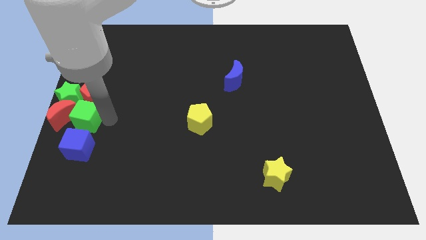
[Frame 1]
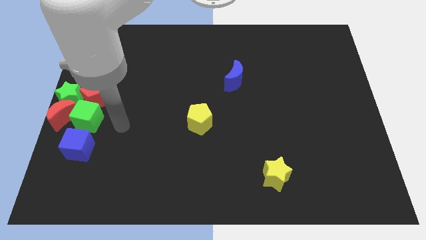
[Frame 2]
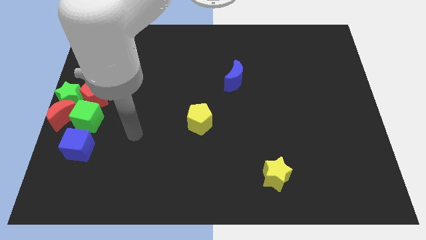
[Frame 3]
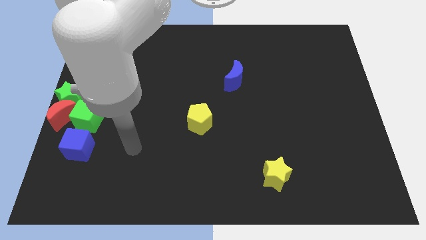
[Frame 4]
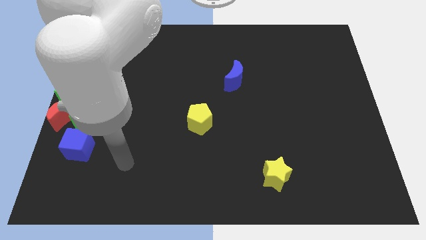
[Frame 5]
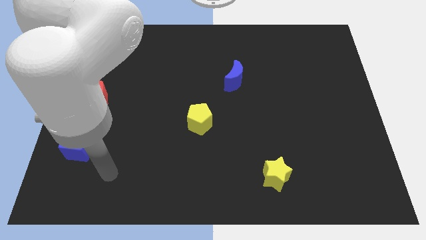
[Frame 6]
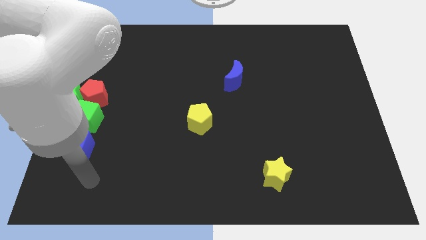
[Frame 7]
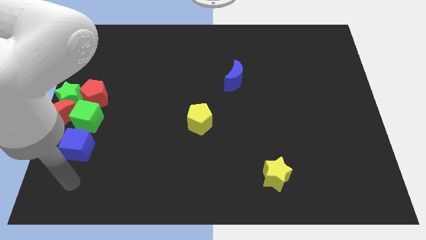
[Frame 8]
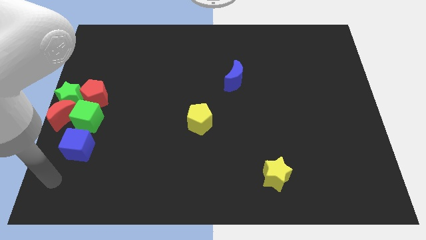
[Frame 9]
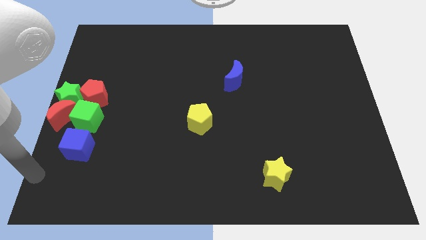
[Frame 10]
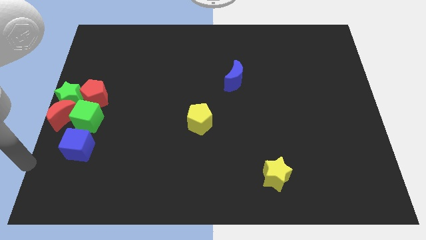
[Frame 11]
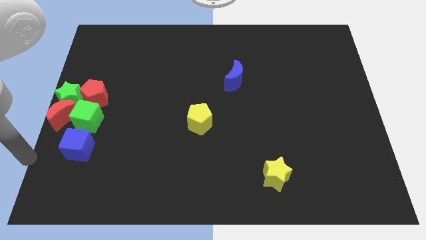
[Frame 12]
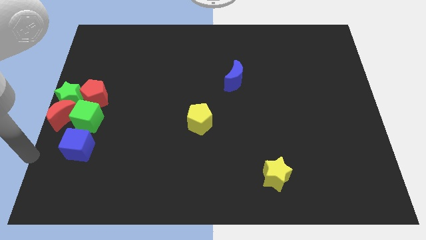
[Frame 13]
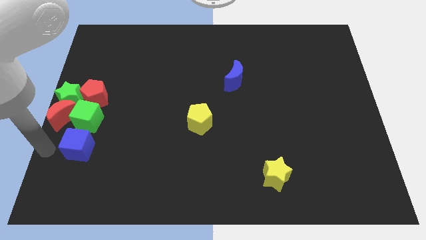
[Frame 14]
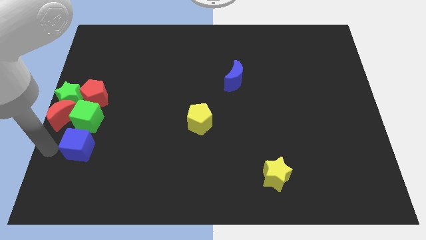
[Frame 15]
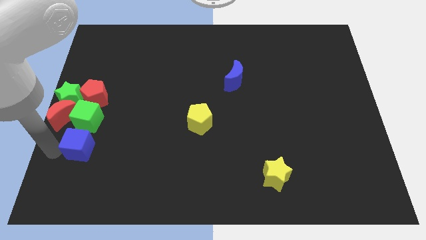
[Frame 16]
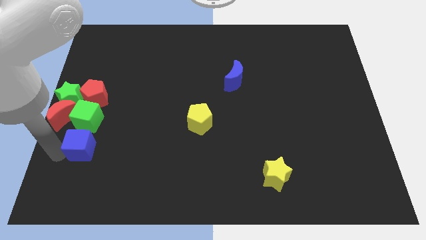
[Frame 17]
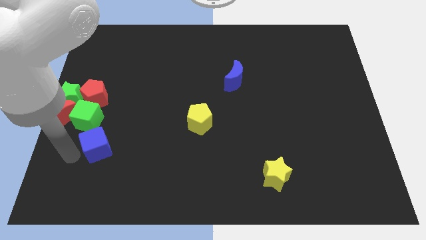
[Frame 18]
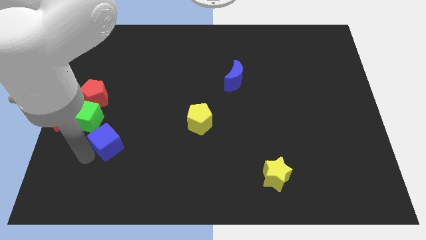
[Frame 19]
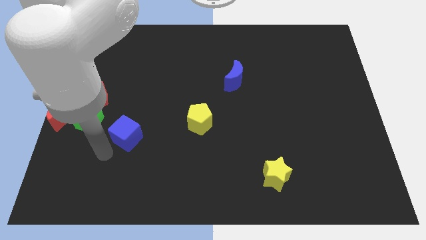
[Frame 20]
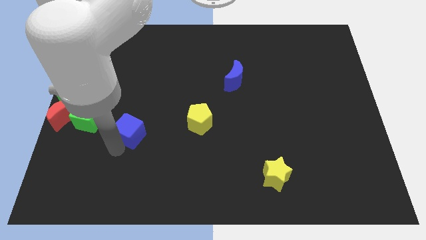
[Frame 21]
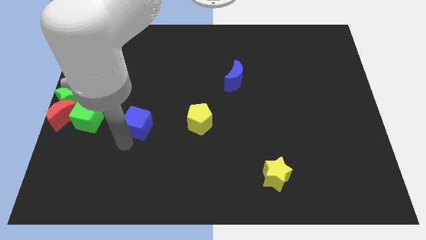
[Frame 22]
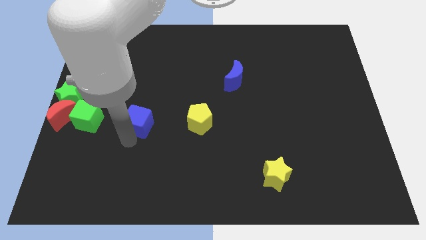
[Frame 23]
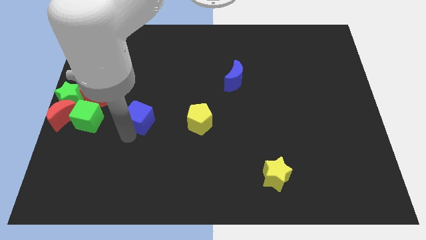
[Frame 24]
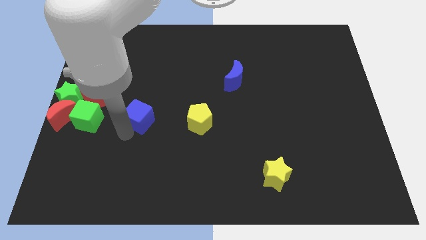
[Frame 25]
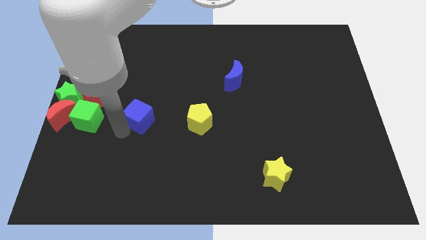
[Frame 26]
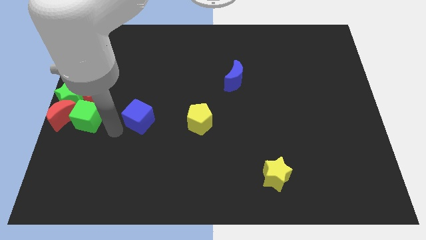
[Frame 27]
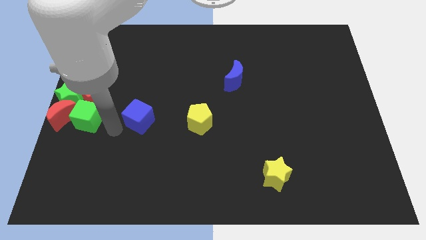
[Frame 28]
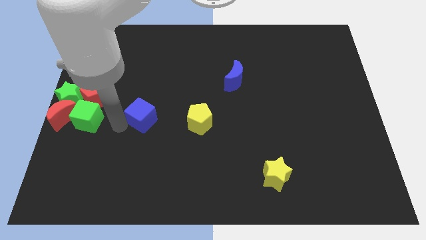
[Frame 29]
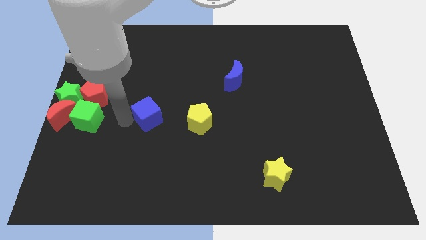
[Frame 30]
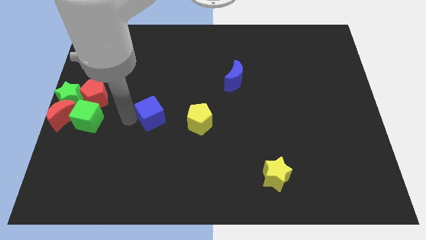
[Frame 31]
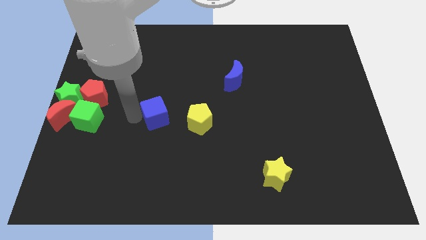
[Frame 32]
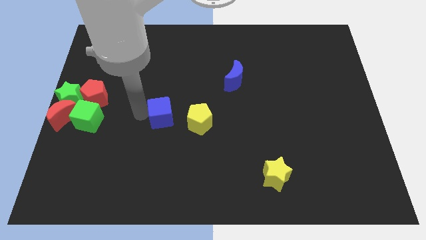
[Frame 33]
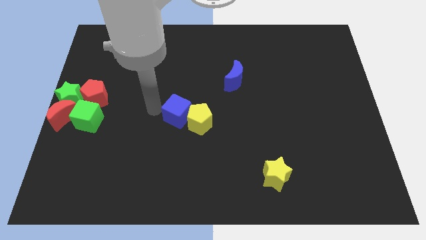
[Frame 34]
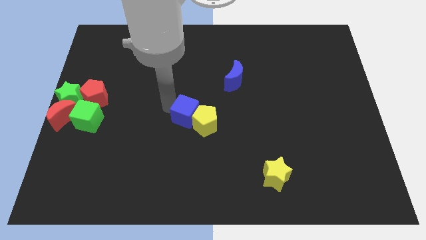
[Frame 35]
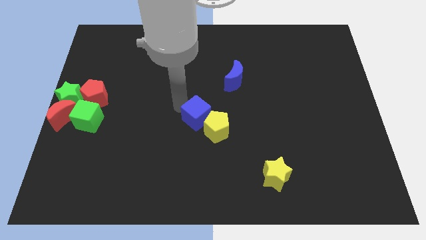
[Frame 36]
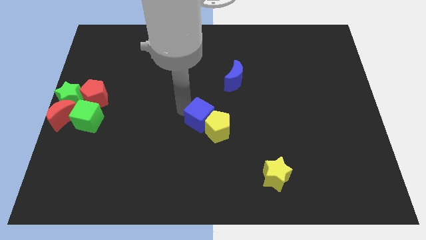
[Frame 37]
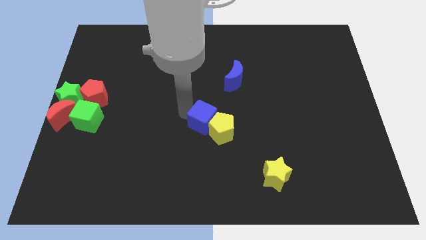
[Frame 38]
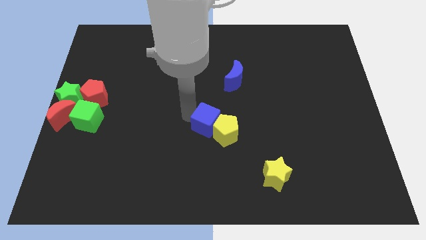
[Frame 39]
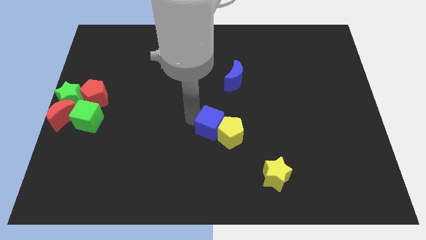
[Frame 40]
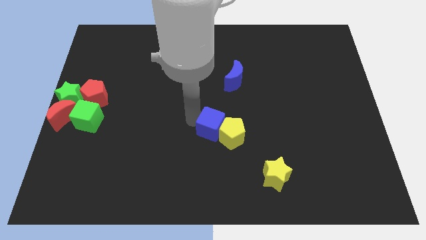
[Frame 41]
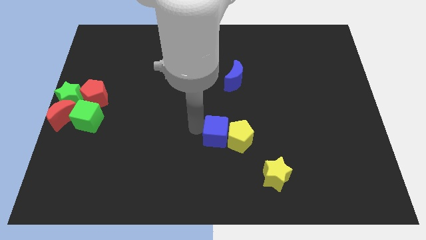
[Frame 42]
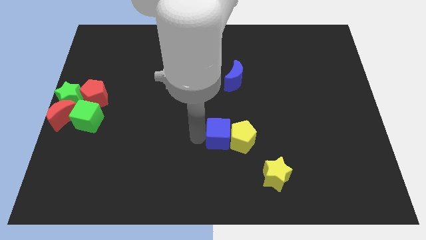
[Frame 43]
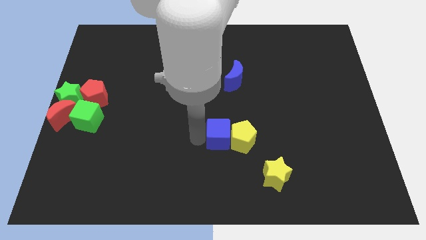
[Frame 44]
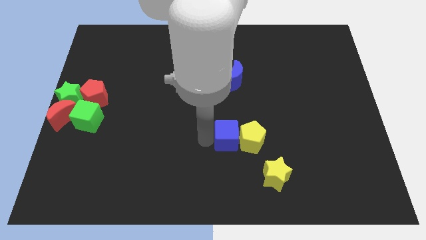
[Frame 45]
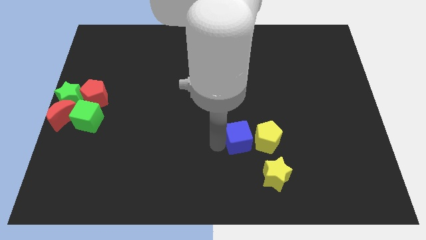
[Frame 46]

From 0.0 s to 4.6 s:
move your arm away from the green cube

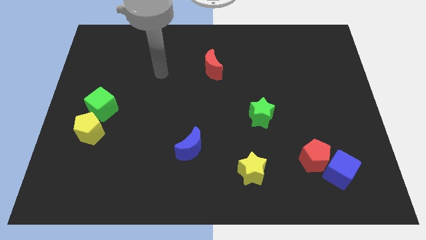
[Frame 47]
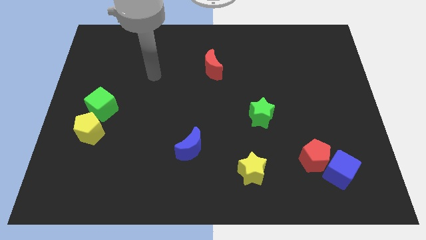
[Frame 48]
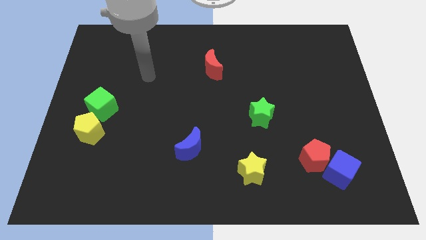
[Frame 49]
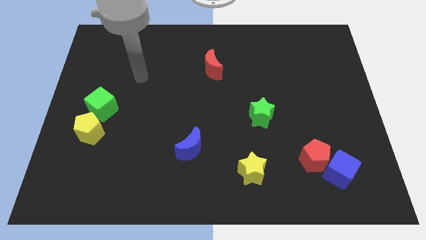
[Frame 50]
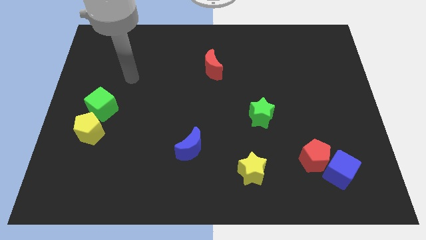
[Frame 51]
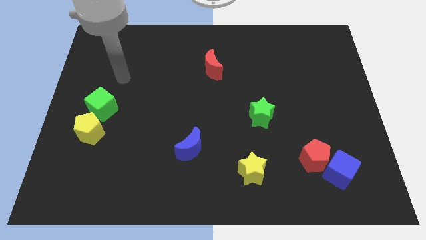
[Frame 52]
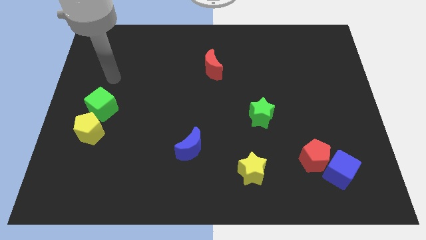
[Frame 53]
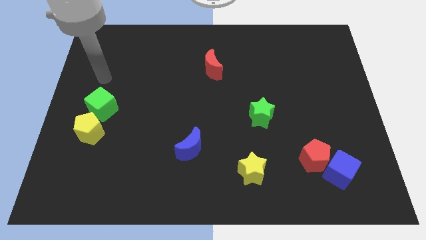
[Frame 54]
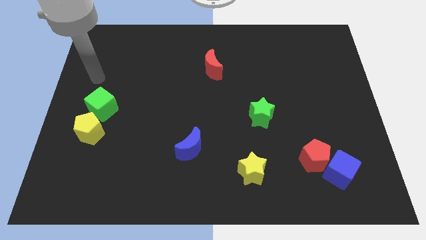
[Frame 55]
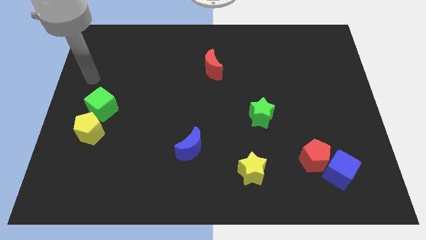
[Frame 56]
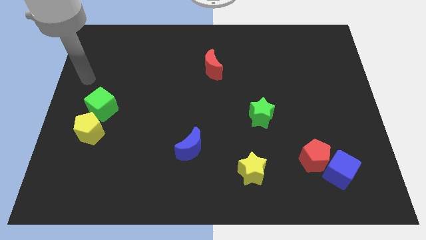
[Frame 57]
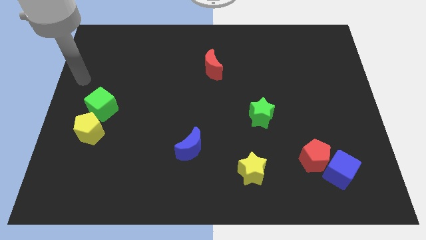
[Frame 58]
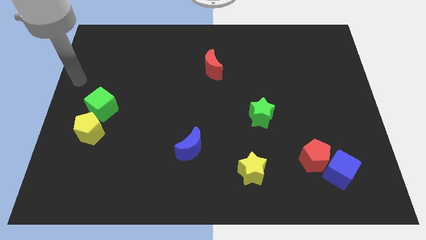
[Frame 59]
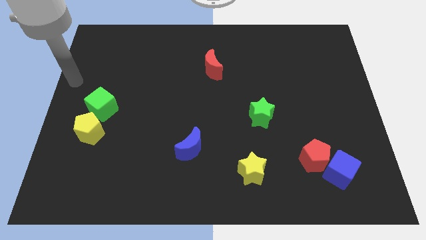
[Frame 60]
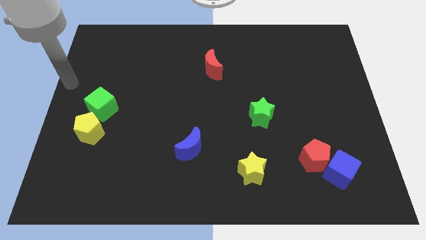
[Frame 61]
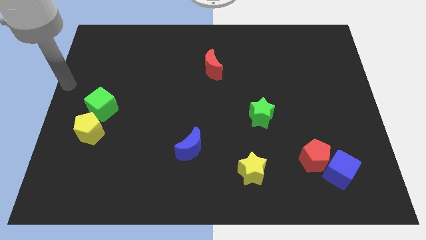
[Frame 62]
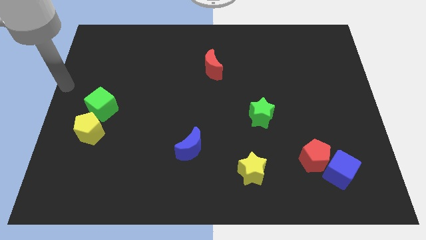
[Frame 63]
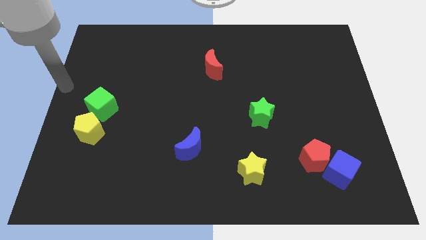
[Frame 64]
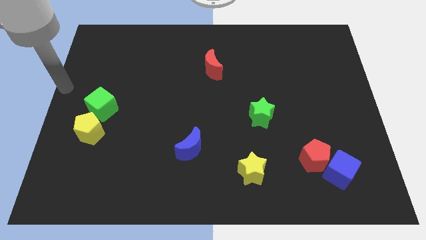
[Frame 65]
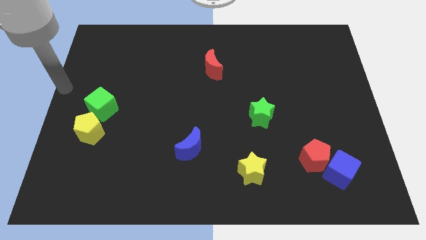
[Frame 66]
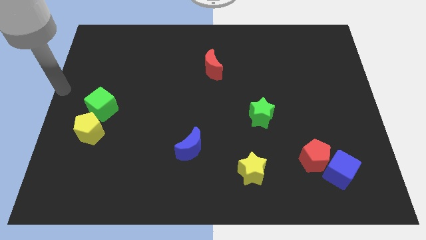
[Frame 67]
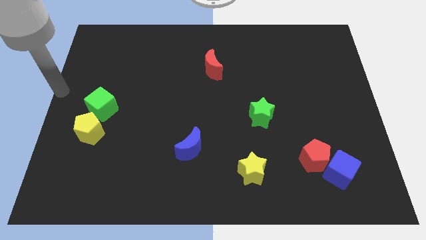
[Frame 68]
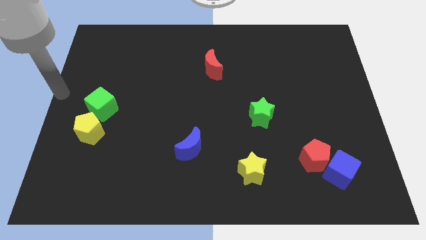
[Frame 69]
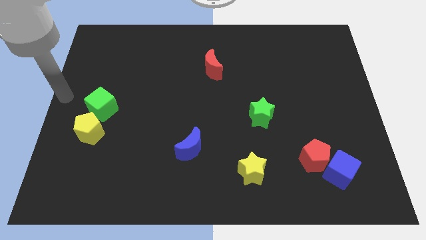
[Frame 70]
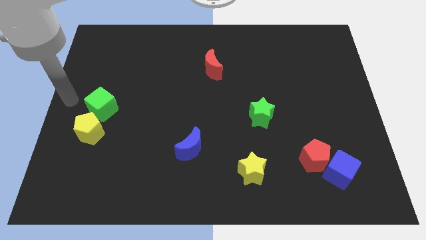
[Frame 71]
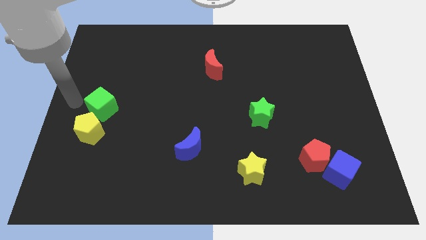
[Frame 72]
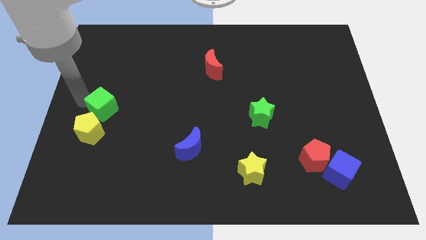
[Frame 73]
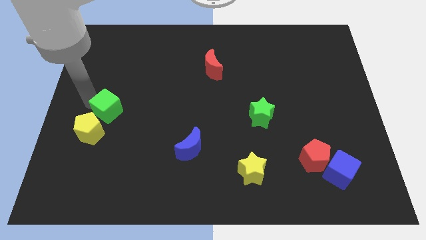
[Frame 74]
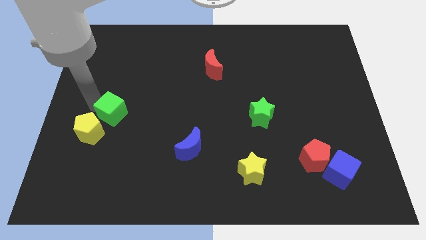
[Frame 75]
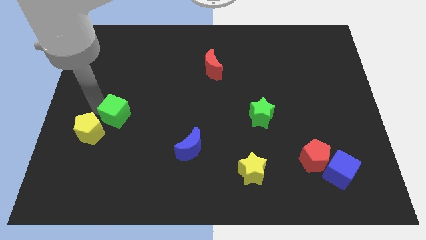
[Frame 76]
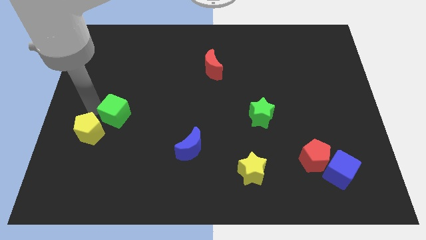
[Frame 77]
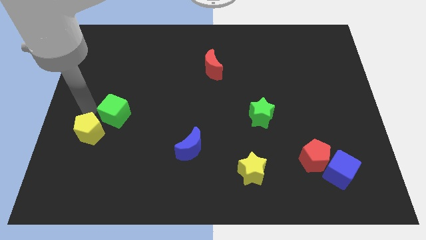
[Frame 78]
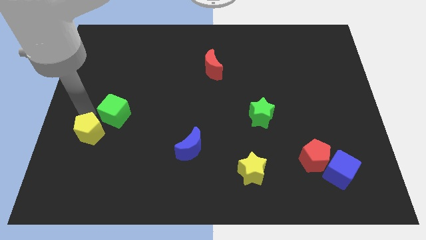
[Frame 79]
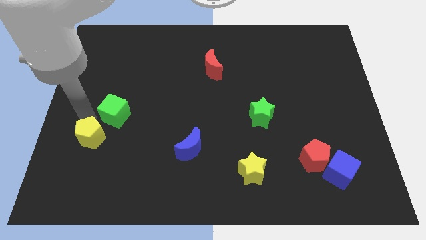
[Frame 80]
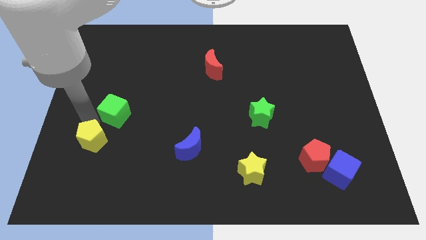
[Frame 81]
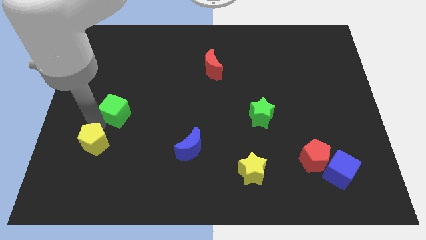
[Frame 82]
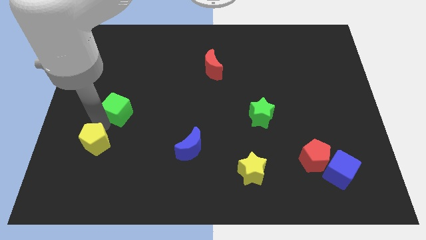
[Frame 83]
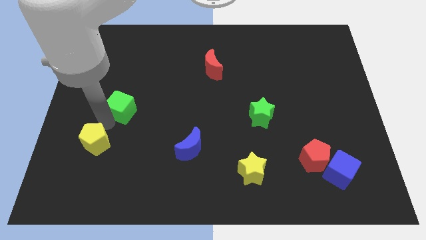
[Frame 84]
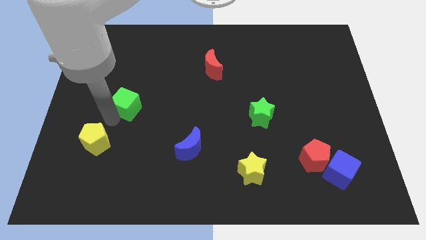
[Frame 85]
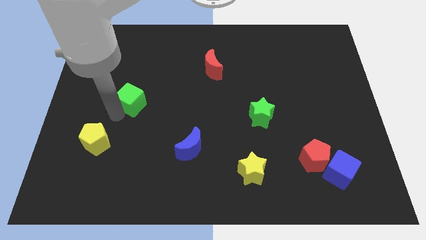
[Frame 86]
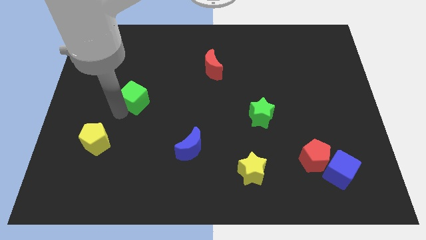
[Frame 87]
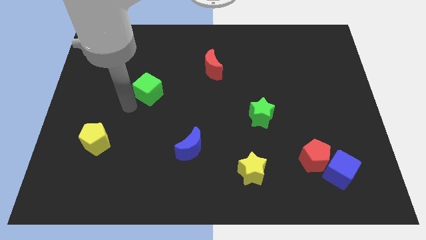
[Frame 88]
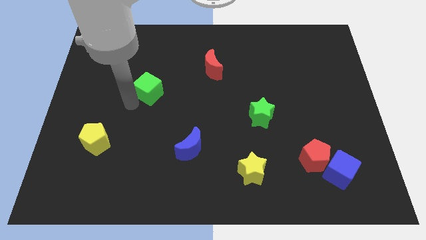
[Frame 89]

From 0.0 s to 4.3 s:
separate the green cube from the yellow pentagon
